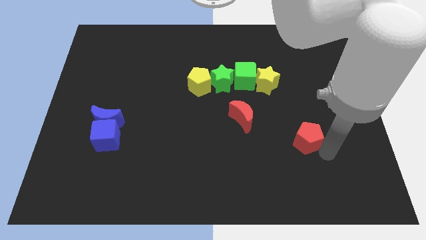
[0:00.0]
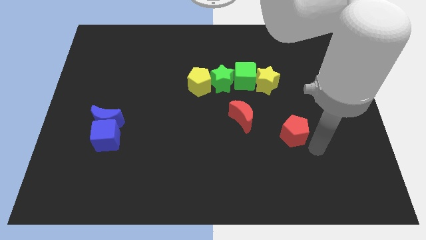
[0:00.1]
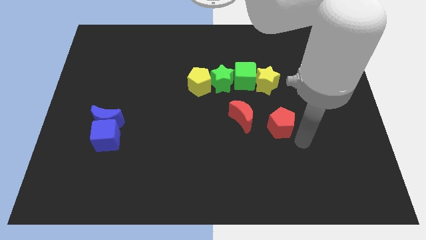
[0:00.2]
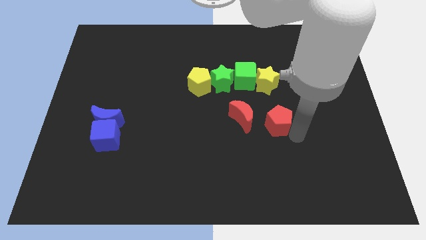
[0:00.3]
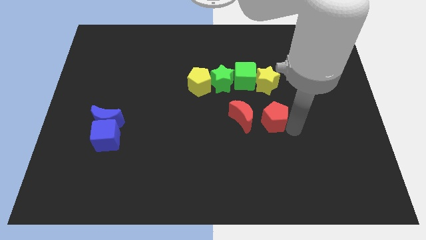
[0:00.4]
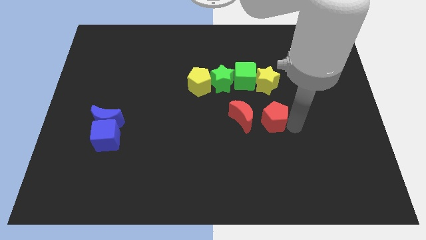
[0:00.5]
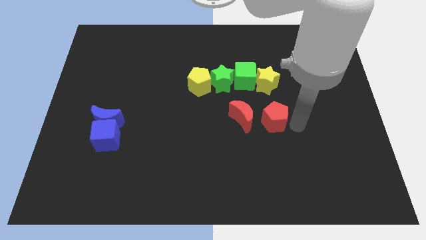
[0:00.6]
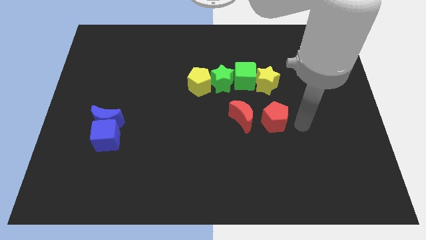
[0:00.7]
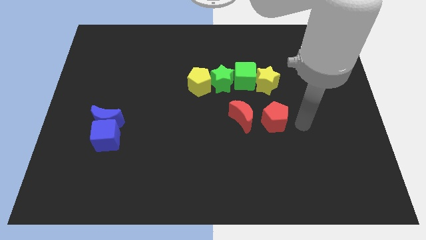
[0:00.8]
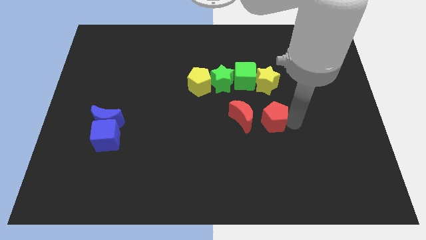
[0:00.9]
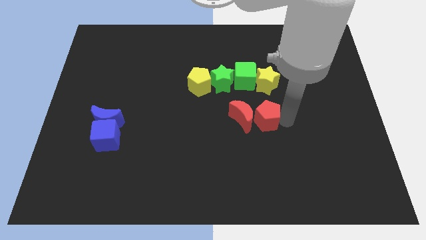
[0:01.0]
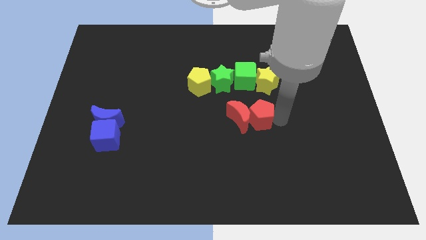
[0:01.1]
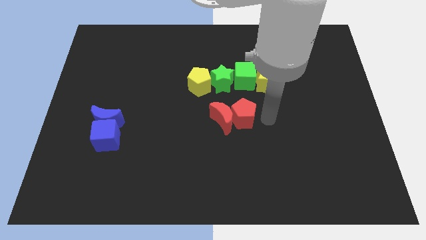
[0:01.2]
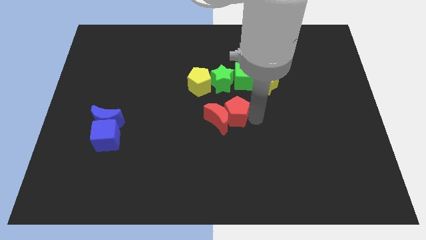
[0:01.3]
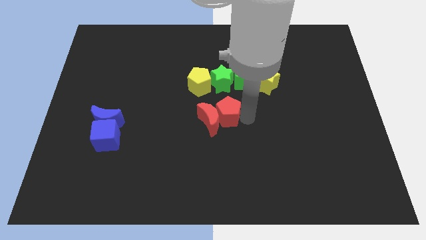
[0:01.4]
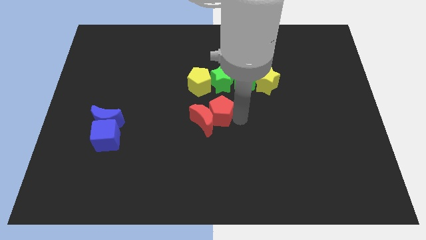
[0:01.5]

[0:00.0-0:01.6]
push the red crescent with the help of the red pentagon towards the center of the board

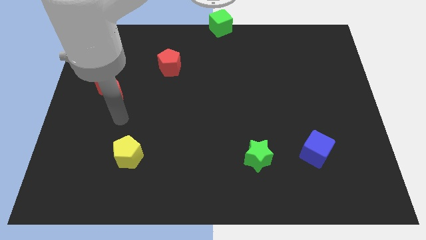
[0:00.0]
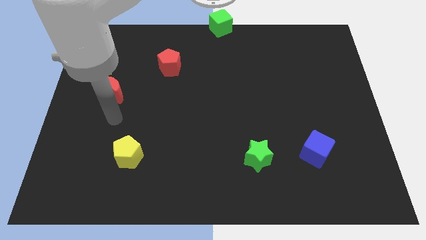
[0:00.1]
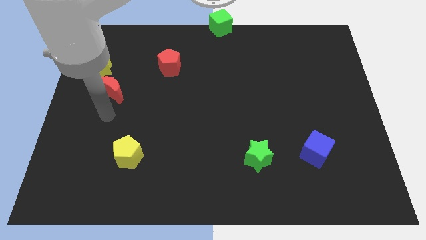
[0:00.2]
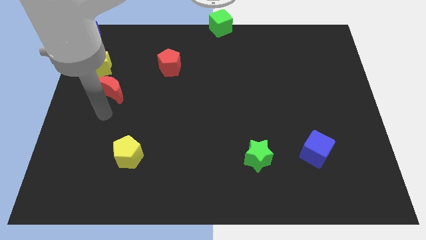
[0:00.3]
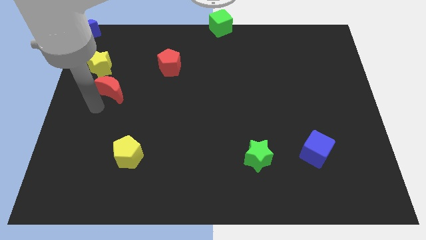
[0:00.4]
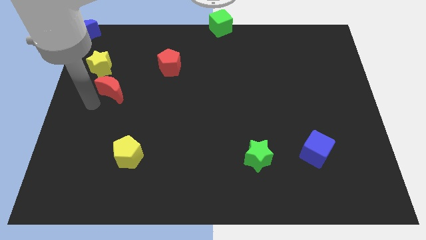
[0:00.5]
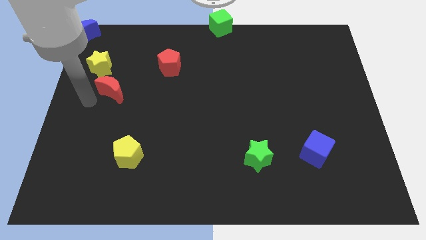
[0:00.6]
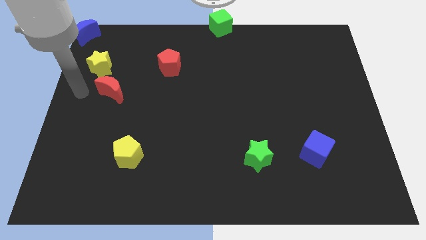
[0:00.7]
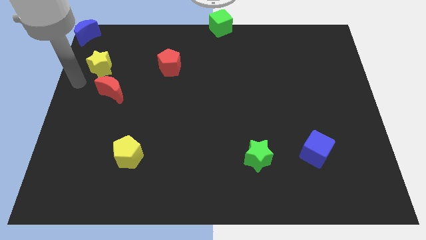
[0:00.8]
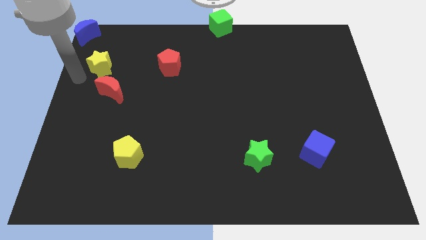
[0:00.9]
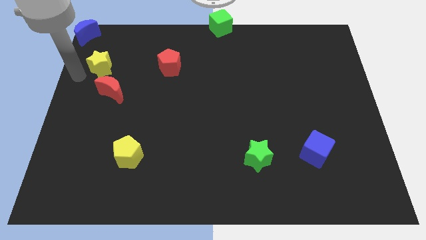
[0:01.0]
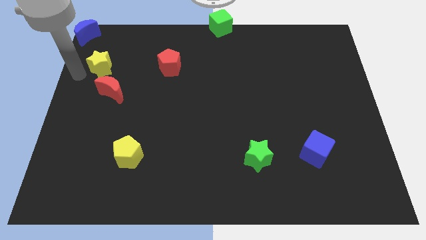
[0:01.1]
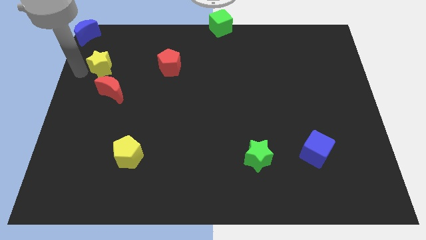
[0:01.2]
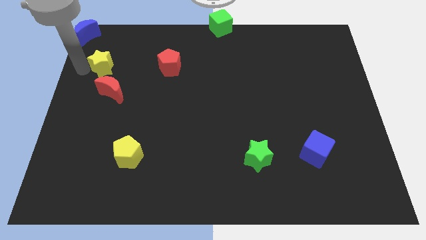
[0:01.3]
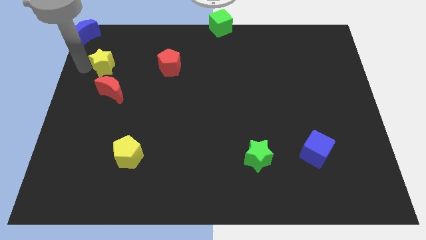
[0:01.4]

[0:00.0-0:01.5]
tap the left side of the yellow star

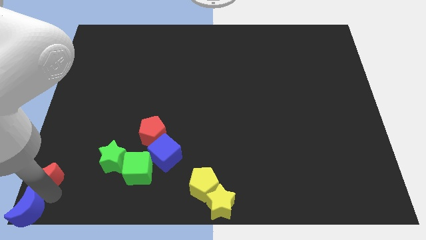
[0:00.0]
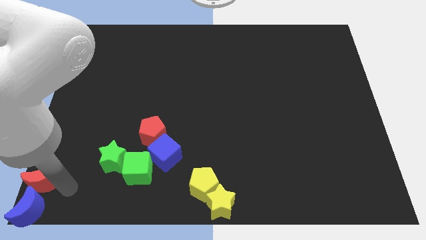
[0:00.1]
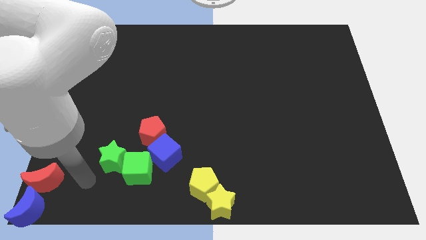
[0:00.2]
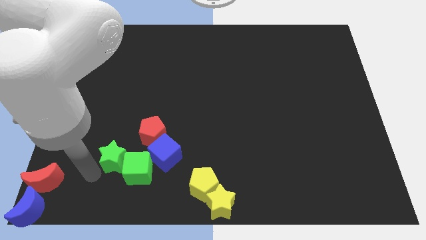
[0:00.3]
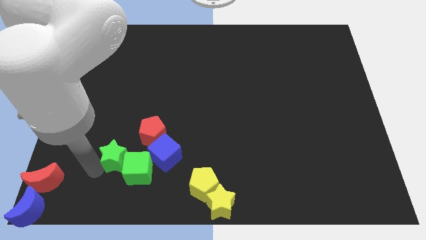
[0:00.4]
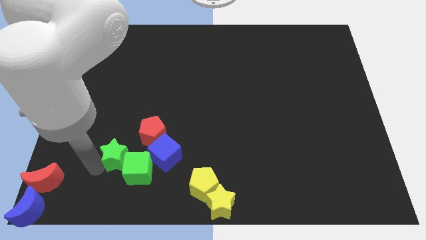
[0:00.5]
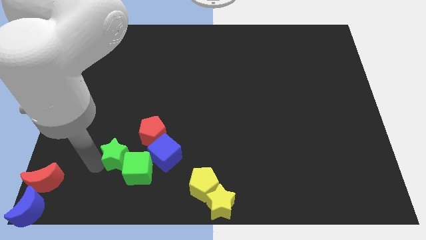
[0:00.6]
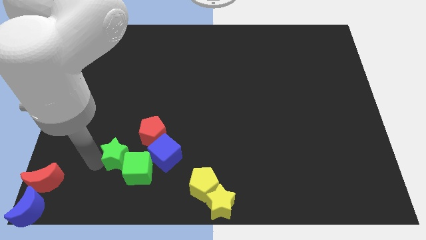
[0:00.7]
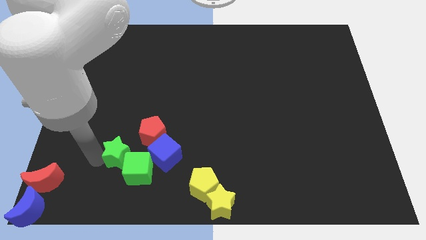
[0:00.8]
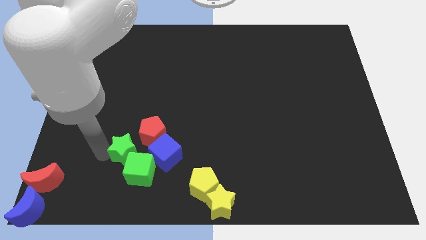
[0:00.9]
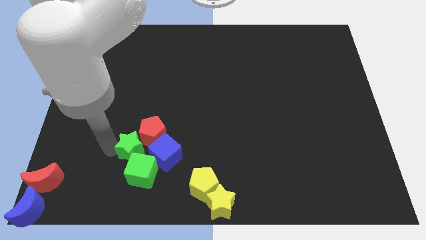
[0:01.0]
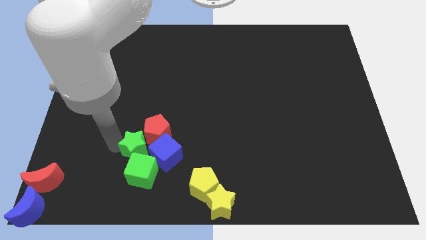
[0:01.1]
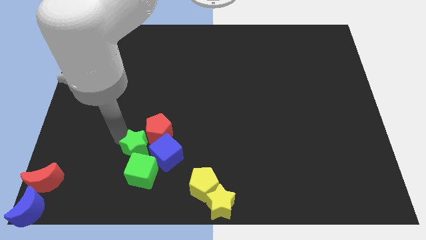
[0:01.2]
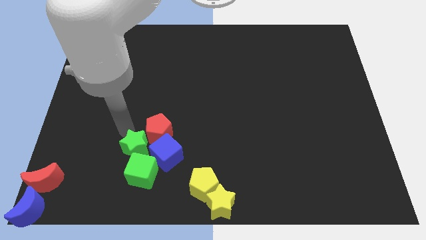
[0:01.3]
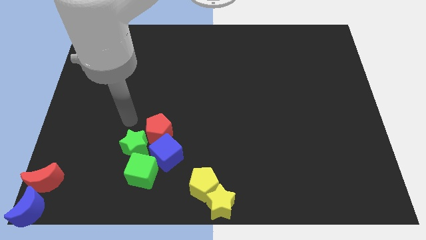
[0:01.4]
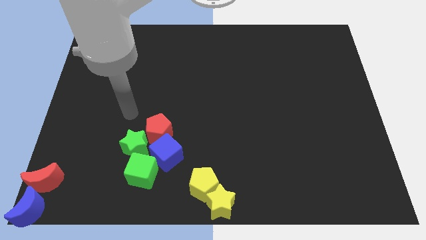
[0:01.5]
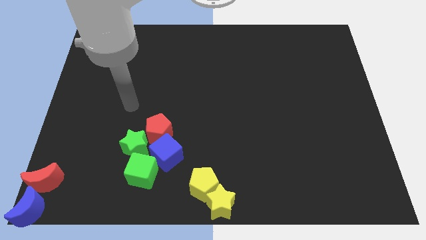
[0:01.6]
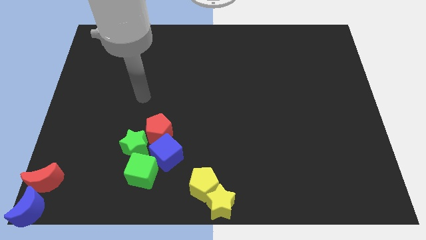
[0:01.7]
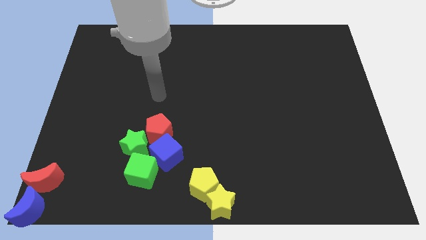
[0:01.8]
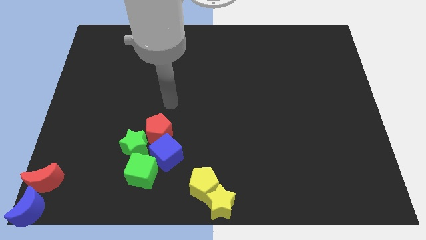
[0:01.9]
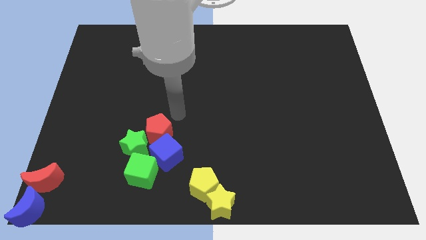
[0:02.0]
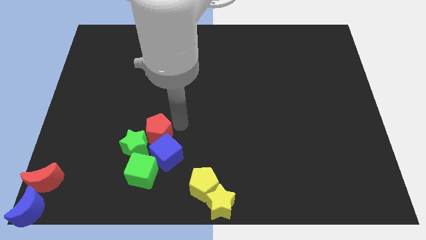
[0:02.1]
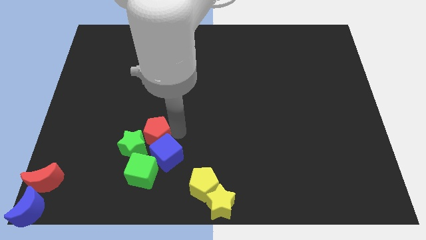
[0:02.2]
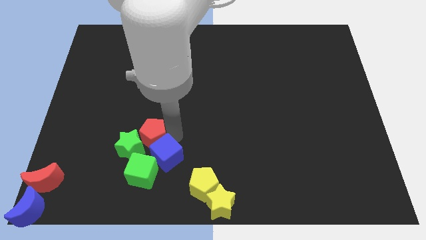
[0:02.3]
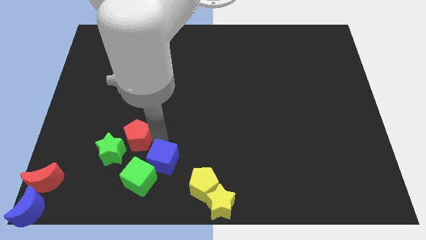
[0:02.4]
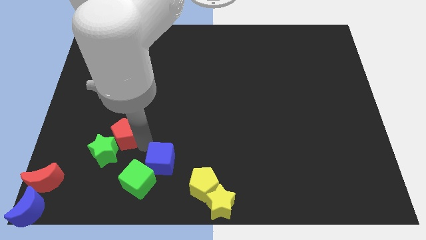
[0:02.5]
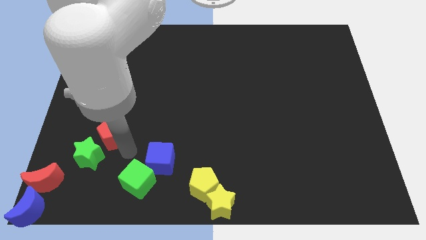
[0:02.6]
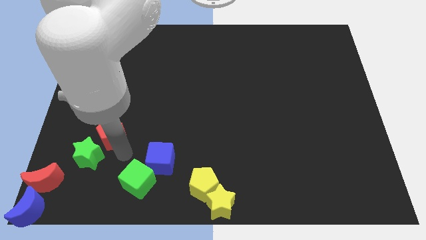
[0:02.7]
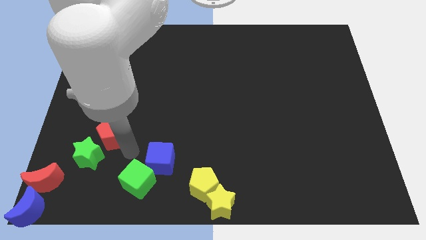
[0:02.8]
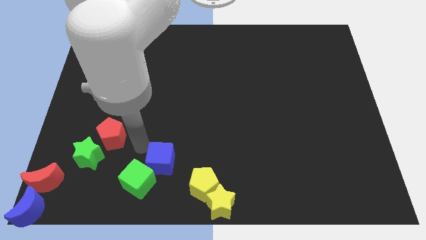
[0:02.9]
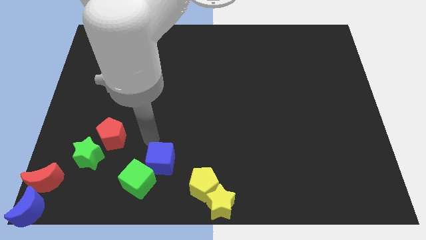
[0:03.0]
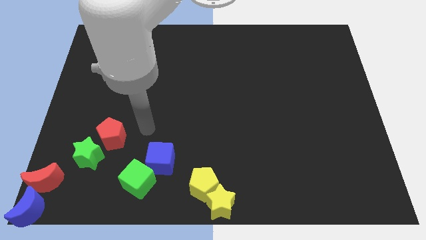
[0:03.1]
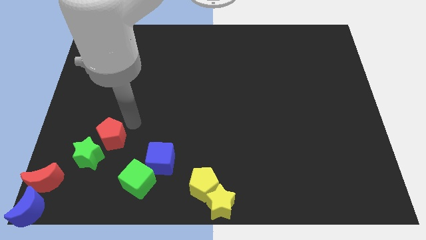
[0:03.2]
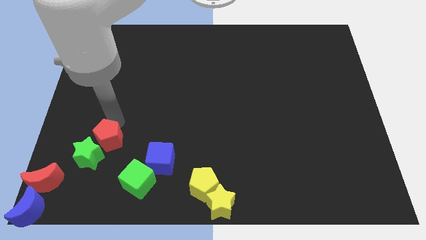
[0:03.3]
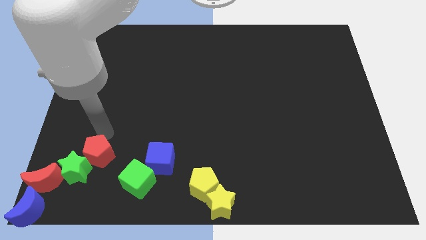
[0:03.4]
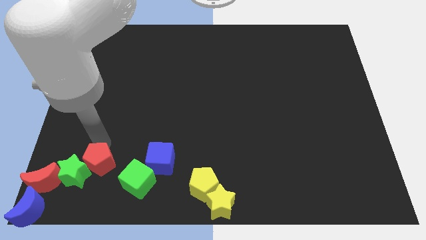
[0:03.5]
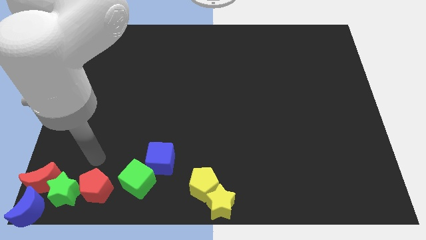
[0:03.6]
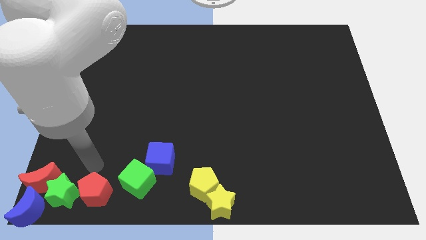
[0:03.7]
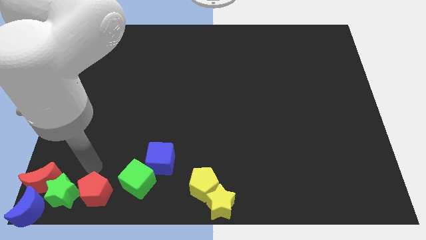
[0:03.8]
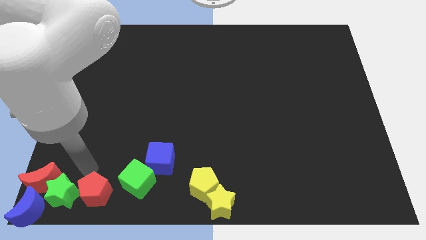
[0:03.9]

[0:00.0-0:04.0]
place the red pentagon and green star on the bottom left of the board

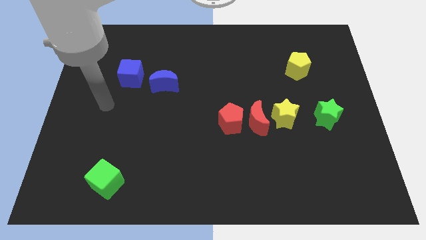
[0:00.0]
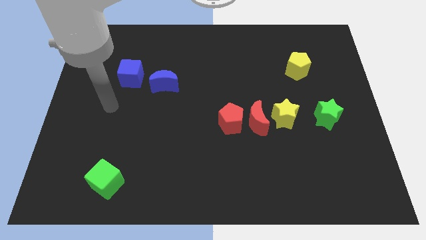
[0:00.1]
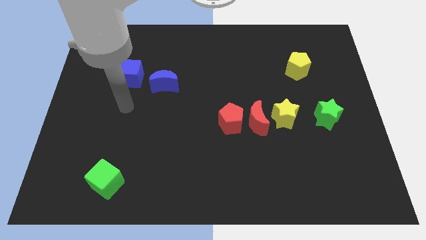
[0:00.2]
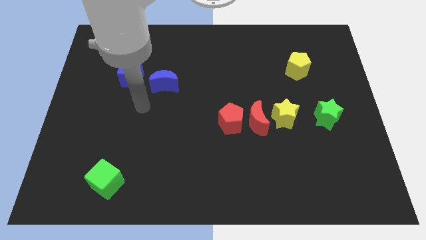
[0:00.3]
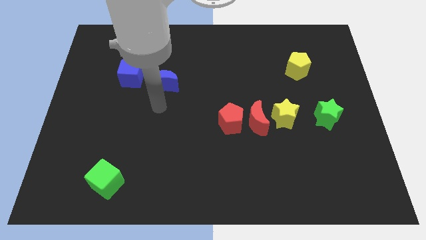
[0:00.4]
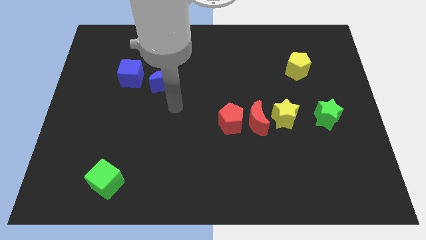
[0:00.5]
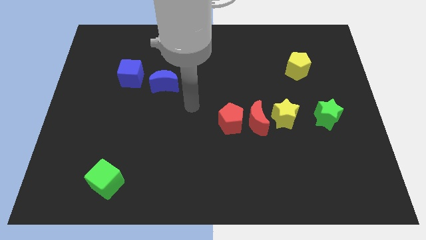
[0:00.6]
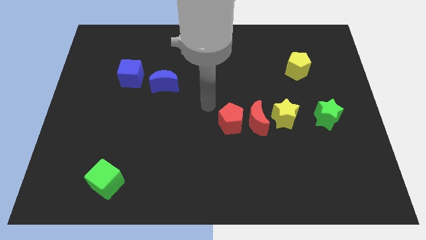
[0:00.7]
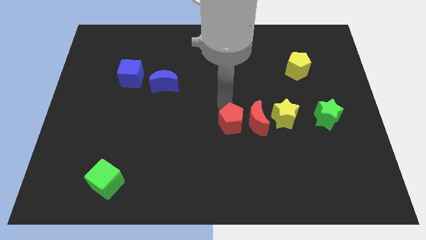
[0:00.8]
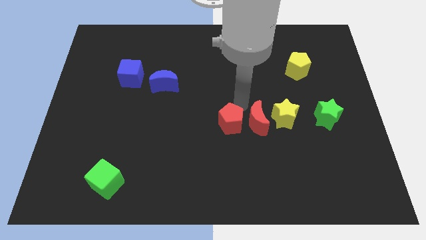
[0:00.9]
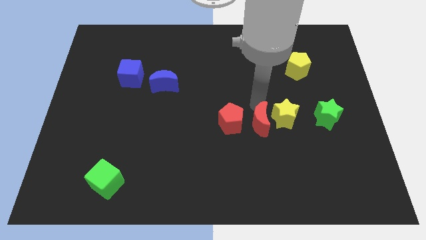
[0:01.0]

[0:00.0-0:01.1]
point your arm at the top of the red crescent

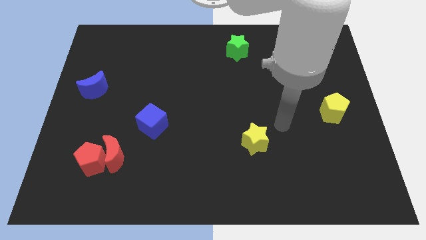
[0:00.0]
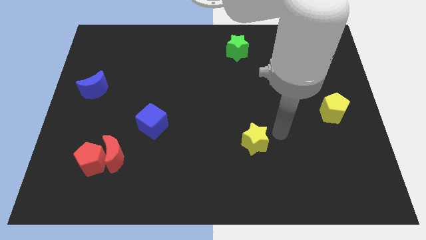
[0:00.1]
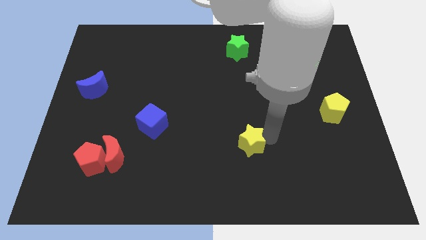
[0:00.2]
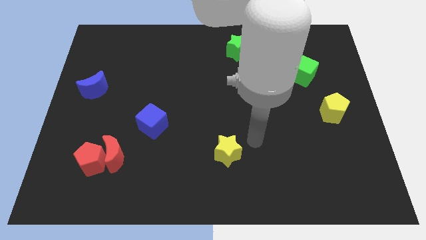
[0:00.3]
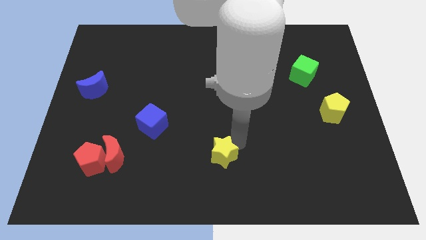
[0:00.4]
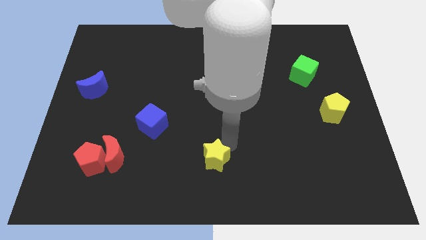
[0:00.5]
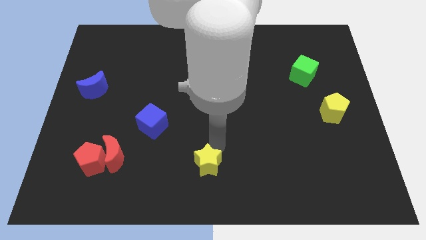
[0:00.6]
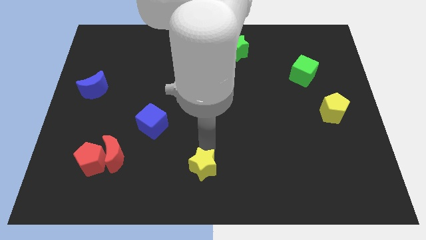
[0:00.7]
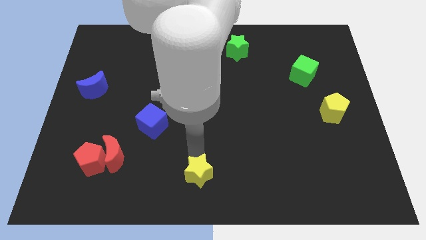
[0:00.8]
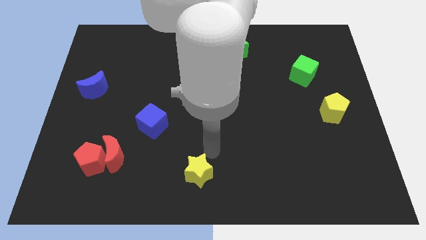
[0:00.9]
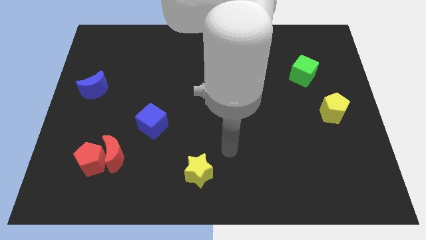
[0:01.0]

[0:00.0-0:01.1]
move the yellow star towards the bottom center
